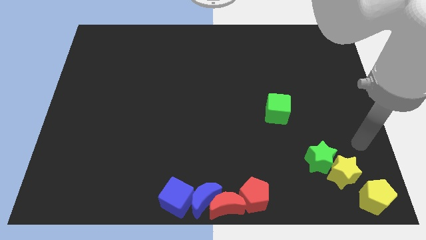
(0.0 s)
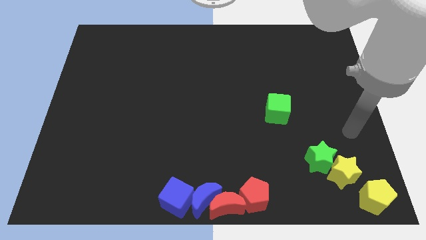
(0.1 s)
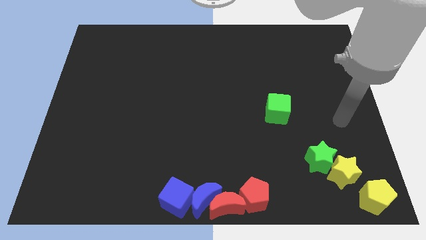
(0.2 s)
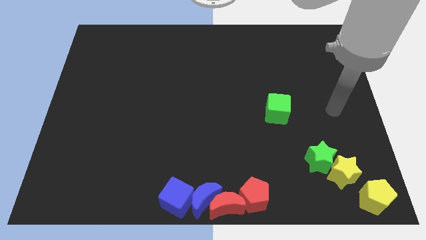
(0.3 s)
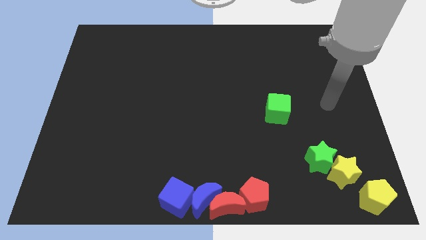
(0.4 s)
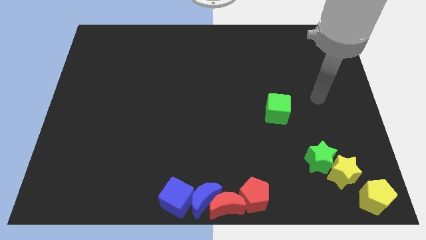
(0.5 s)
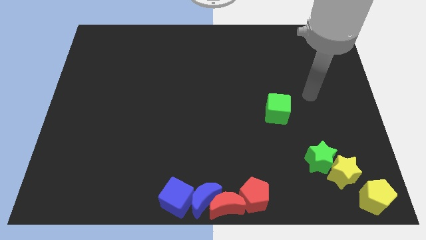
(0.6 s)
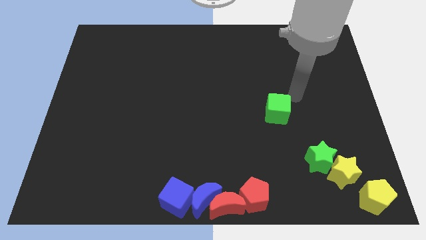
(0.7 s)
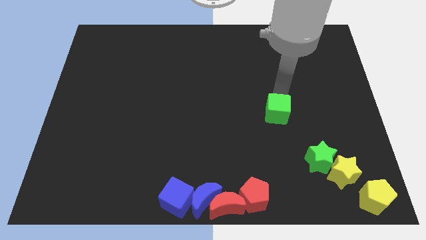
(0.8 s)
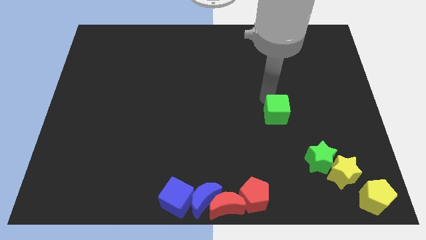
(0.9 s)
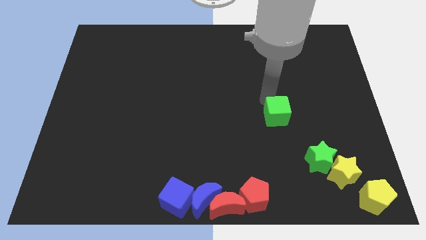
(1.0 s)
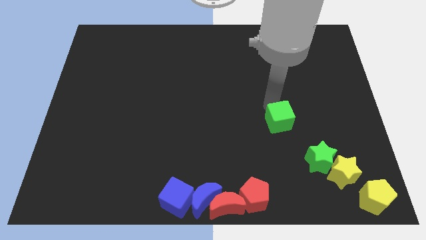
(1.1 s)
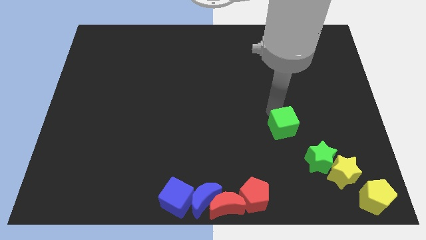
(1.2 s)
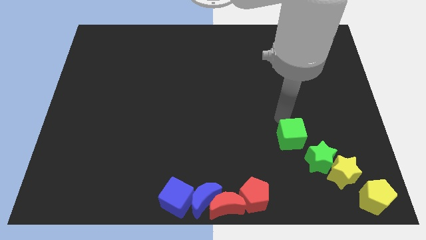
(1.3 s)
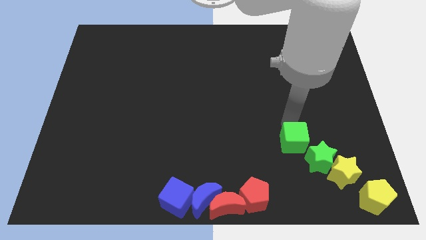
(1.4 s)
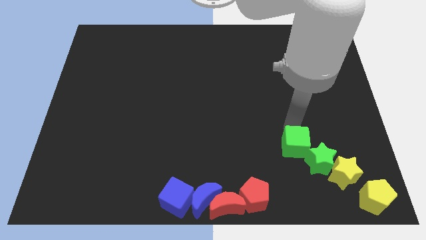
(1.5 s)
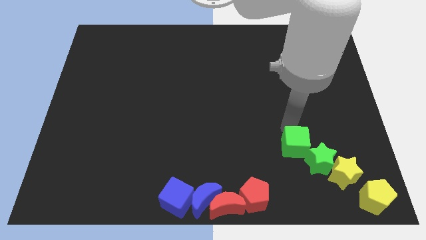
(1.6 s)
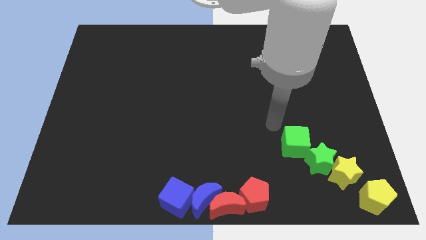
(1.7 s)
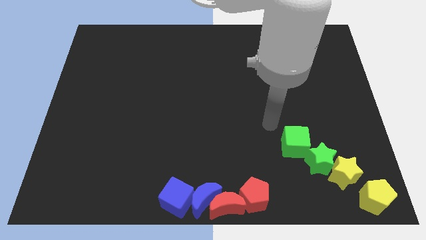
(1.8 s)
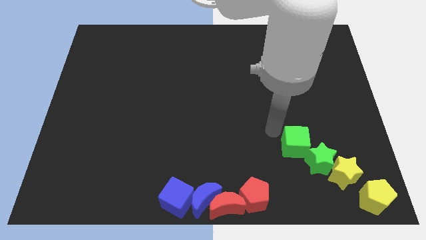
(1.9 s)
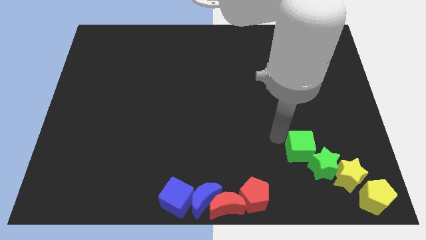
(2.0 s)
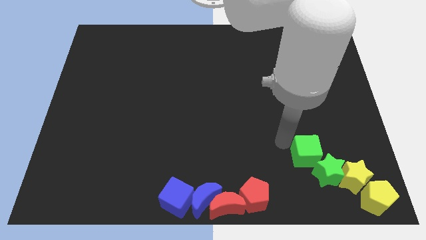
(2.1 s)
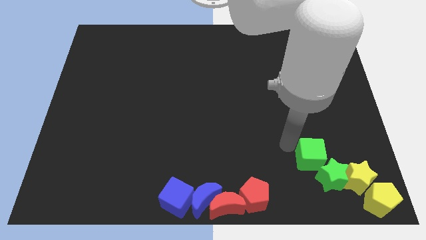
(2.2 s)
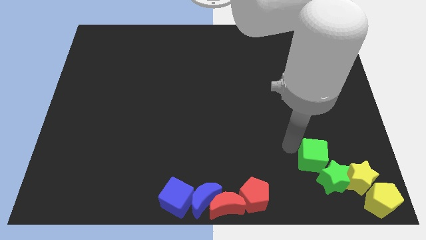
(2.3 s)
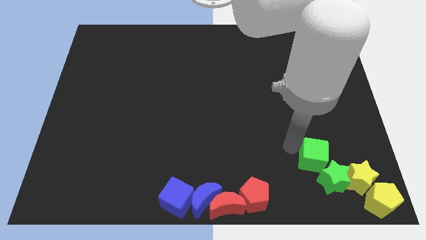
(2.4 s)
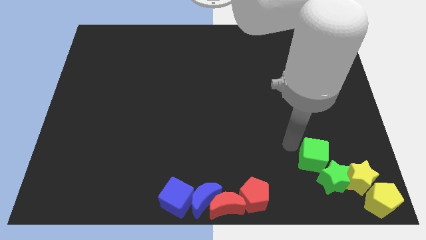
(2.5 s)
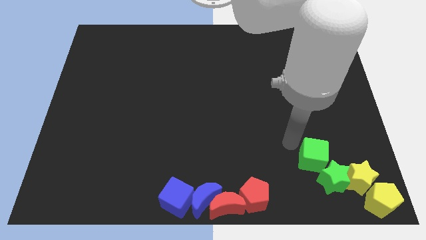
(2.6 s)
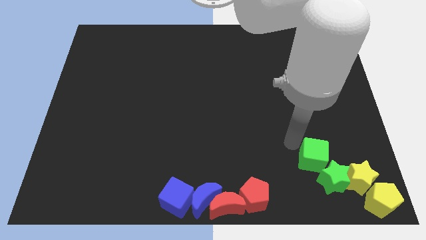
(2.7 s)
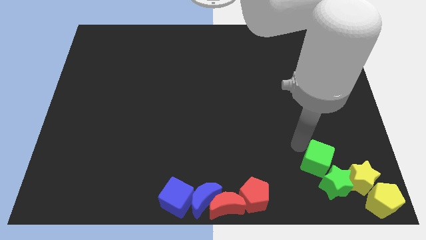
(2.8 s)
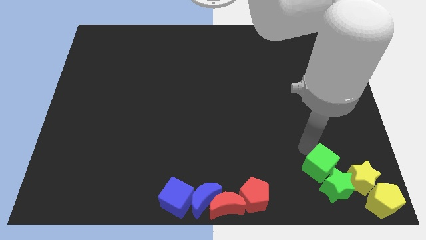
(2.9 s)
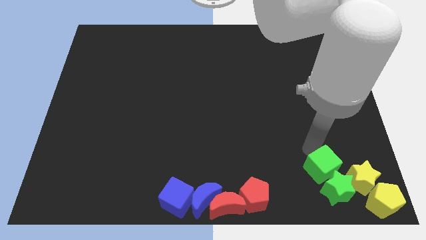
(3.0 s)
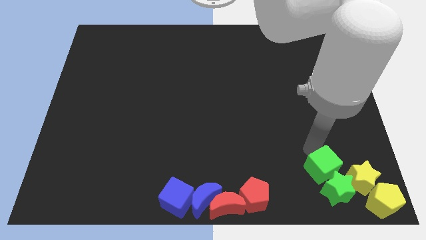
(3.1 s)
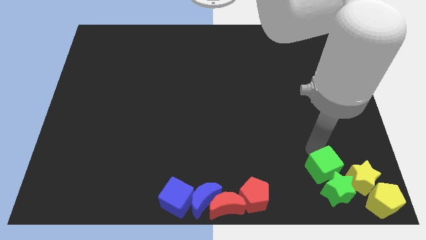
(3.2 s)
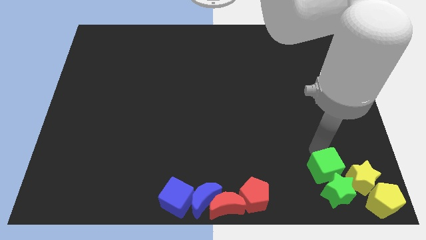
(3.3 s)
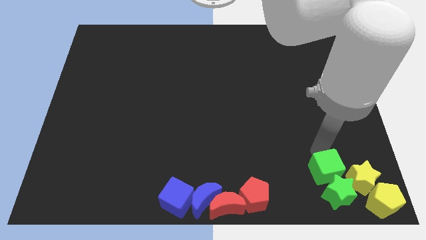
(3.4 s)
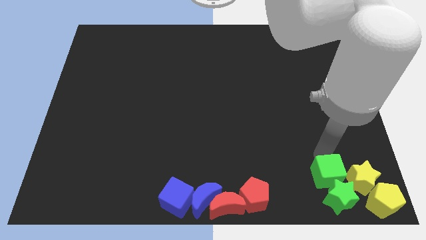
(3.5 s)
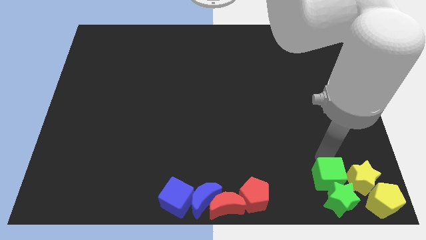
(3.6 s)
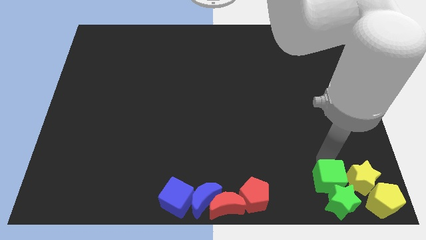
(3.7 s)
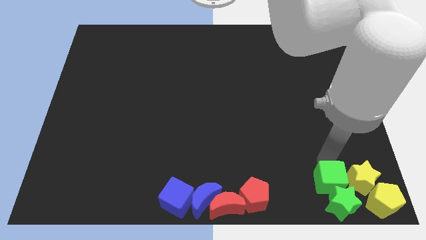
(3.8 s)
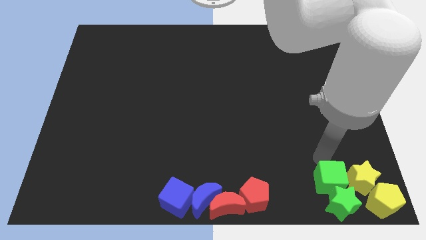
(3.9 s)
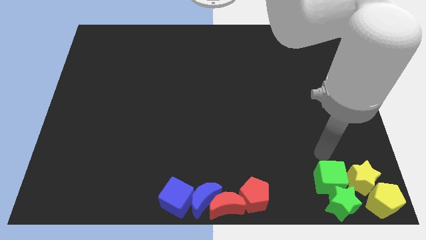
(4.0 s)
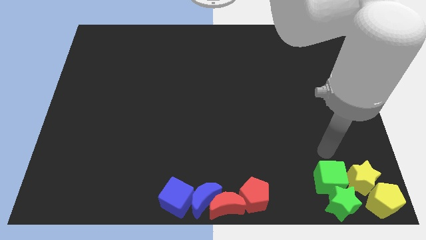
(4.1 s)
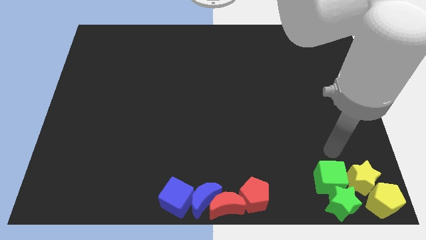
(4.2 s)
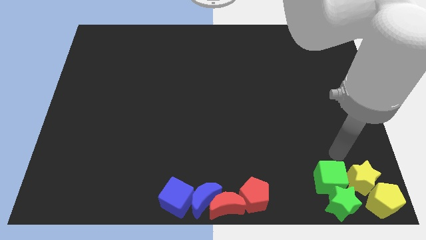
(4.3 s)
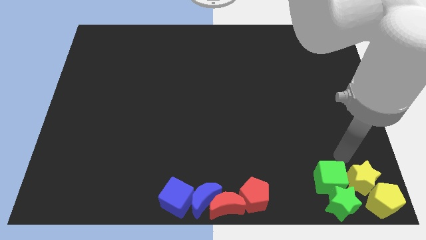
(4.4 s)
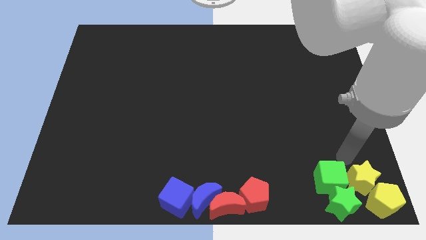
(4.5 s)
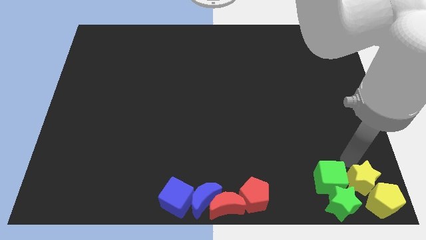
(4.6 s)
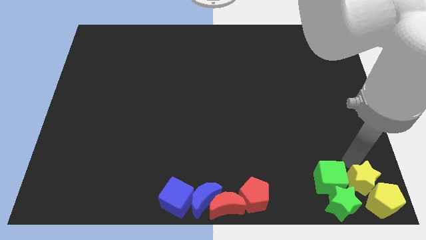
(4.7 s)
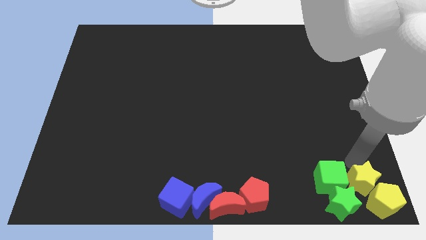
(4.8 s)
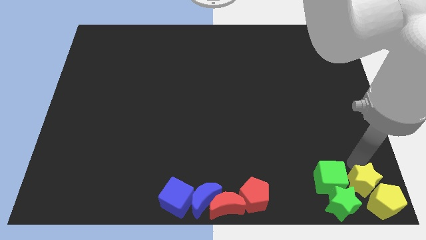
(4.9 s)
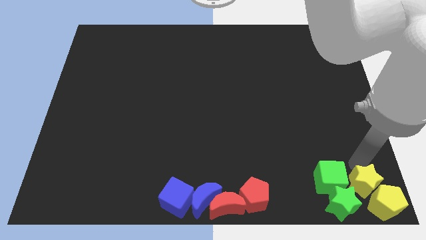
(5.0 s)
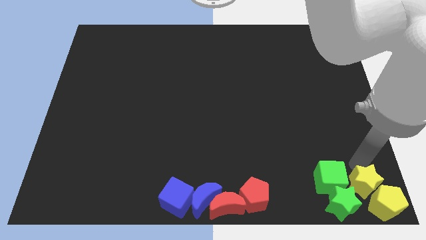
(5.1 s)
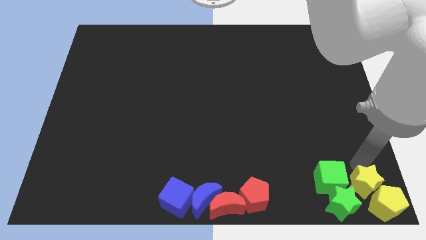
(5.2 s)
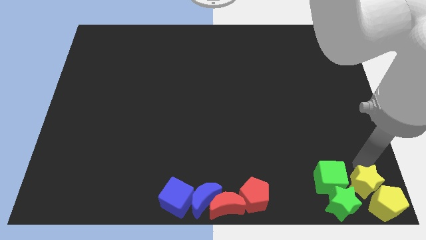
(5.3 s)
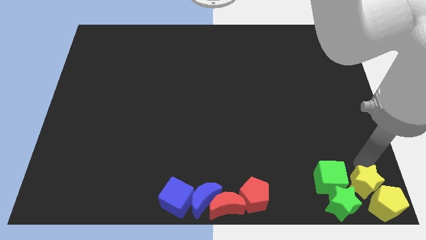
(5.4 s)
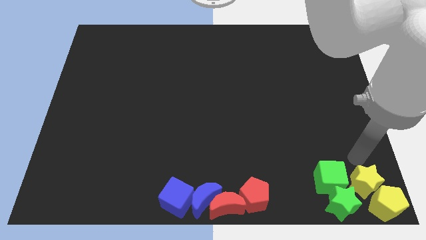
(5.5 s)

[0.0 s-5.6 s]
place the green cubegreen staryellow pentagonyellow star at the right bottom of the board

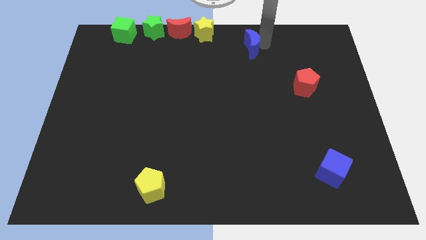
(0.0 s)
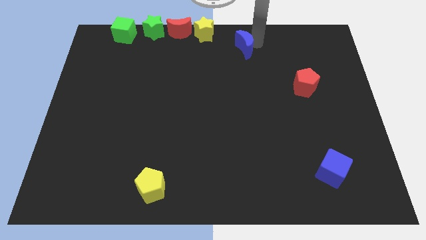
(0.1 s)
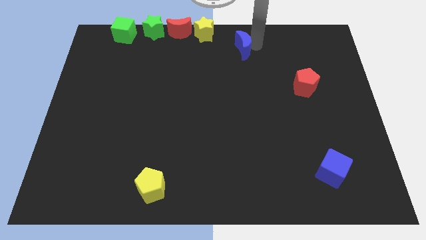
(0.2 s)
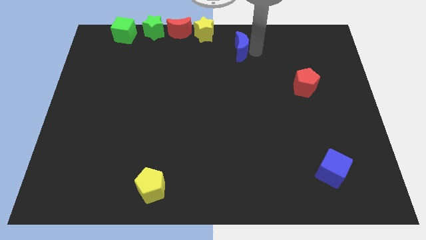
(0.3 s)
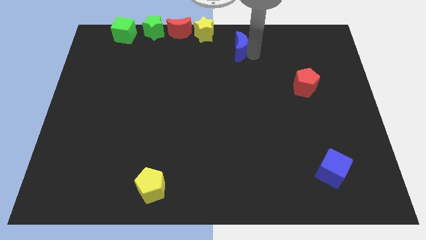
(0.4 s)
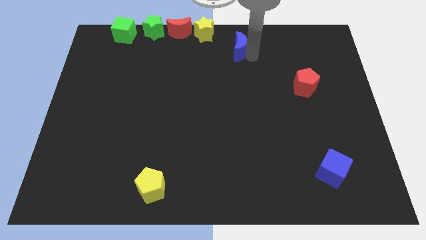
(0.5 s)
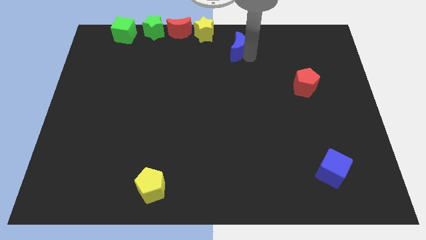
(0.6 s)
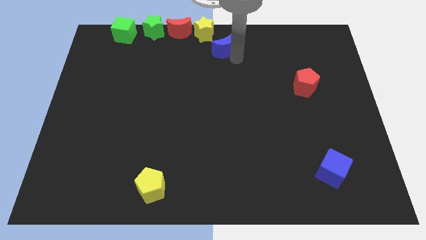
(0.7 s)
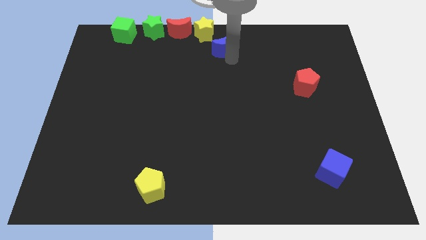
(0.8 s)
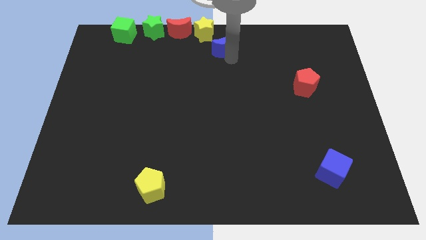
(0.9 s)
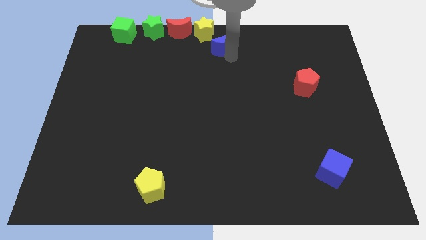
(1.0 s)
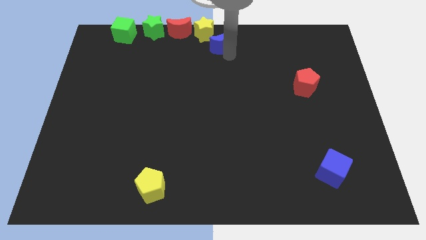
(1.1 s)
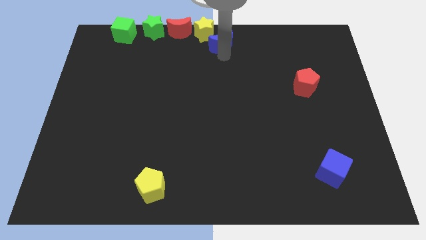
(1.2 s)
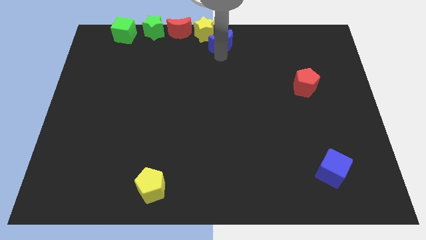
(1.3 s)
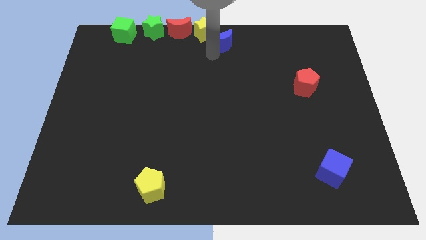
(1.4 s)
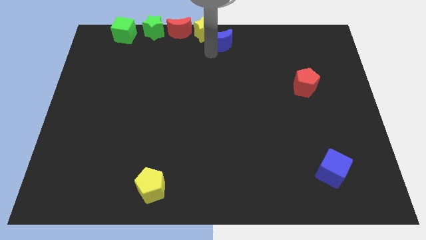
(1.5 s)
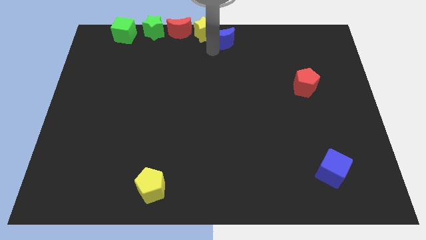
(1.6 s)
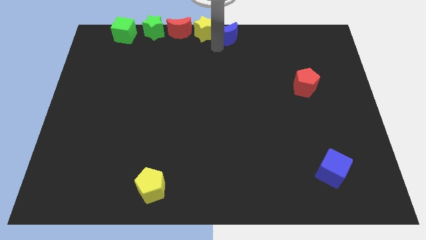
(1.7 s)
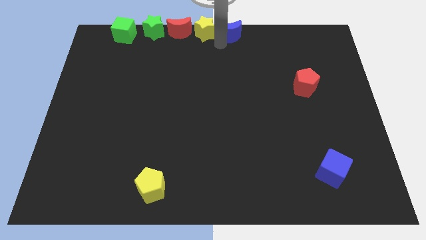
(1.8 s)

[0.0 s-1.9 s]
push the blue cube into yellow star

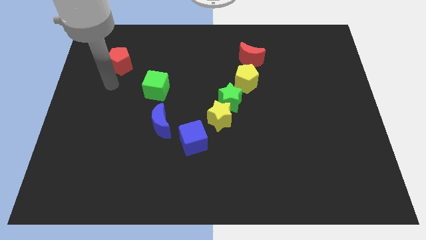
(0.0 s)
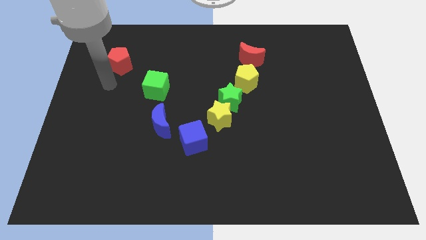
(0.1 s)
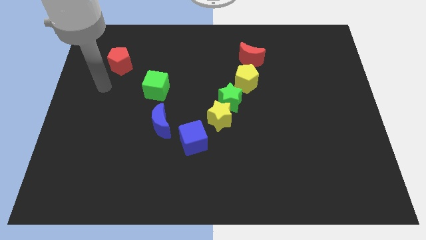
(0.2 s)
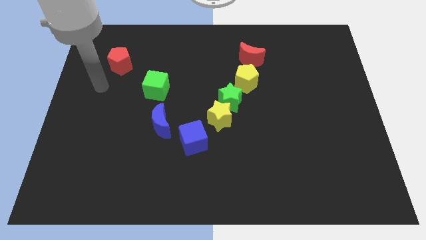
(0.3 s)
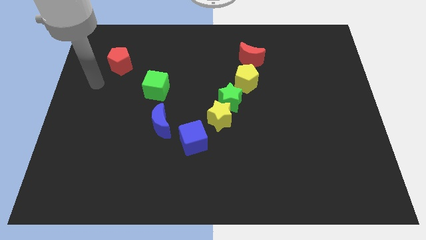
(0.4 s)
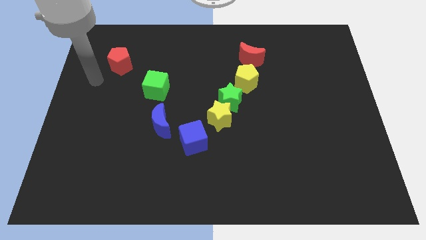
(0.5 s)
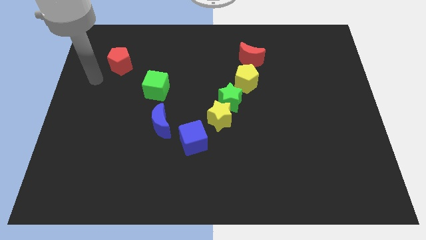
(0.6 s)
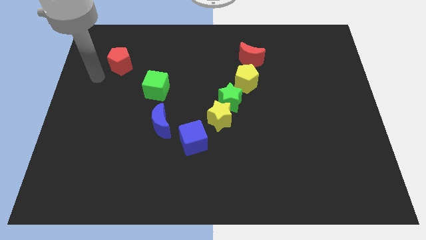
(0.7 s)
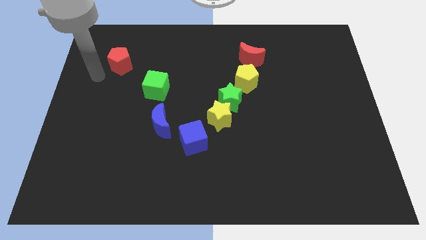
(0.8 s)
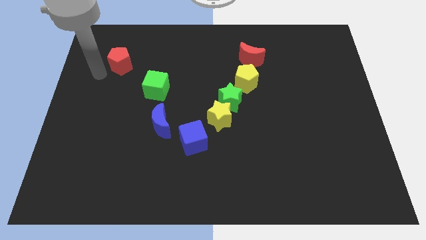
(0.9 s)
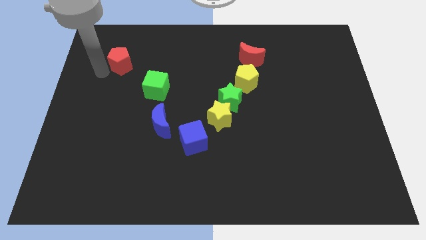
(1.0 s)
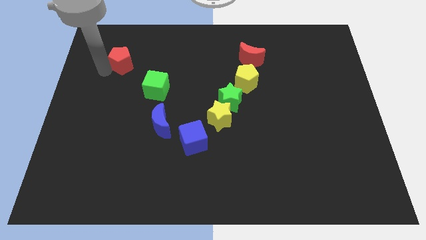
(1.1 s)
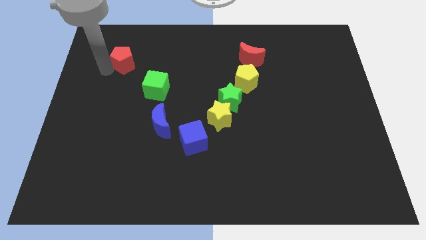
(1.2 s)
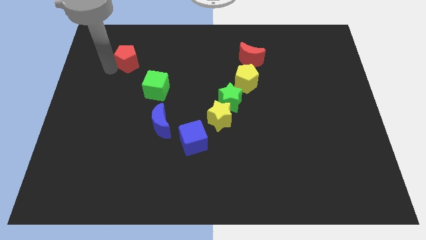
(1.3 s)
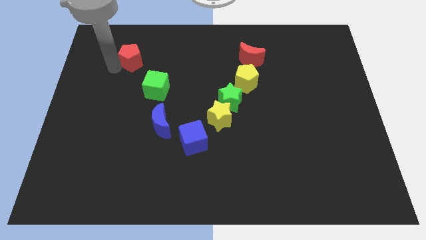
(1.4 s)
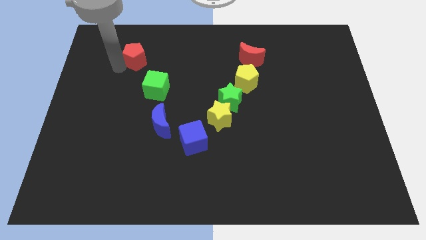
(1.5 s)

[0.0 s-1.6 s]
push the red pentagon towards the top center of the board
